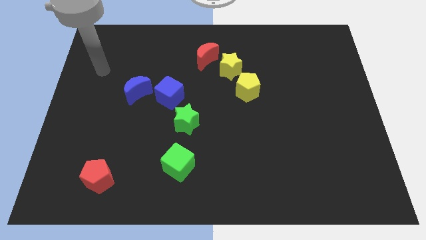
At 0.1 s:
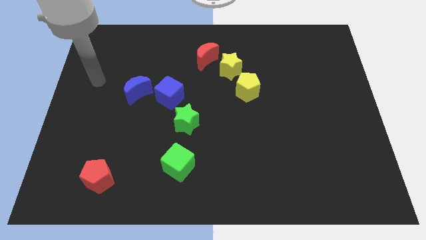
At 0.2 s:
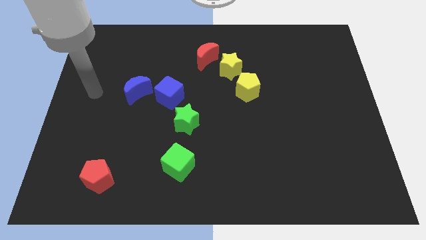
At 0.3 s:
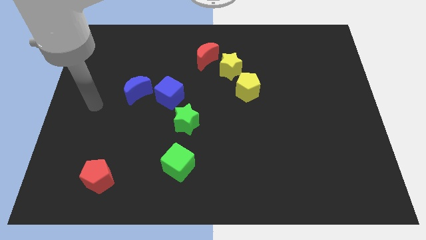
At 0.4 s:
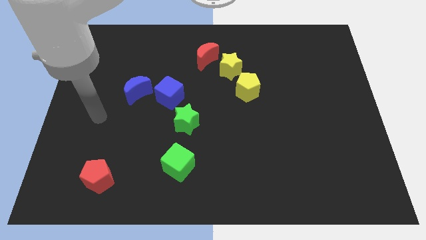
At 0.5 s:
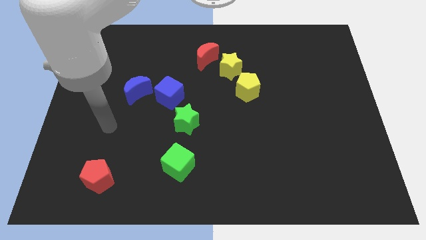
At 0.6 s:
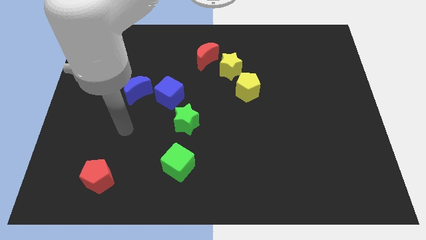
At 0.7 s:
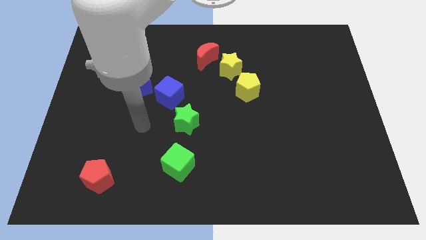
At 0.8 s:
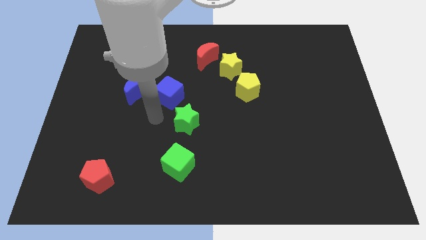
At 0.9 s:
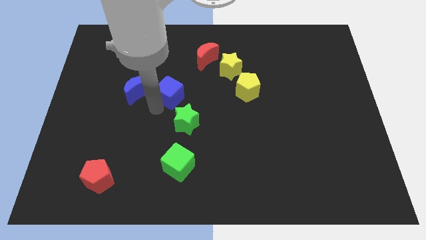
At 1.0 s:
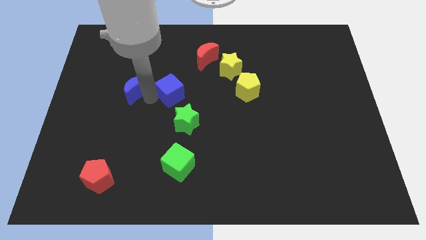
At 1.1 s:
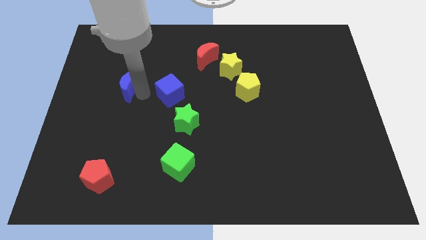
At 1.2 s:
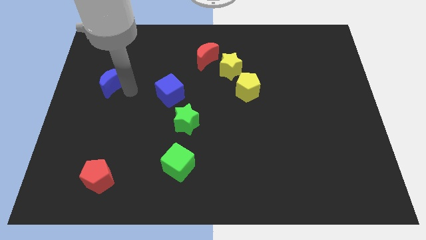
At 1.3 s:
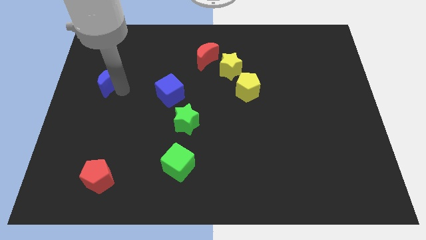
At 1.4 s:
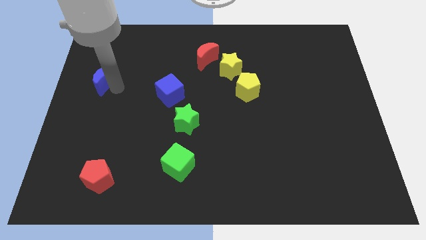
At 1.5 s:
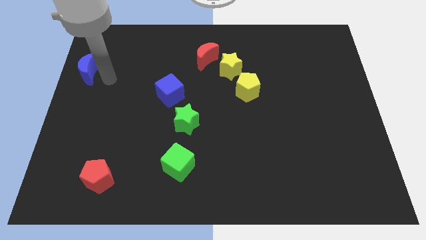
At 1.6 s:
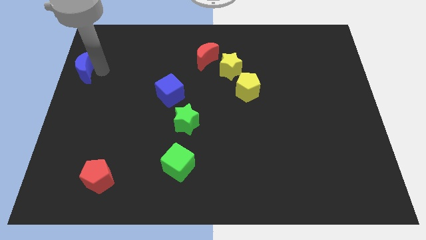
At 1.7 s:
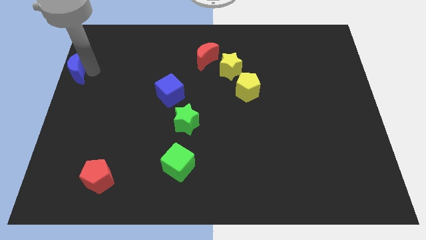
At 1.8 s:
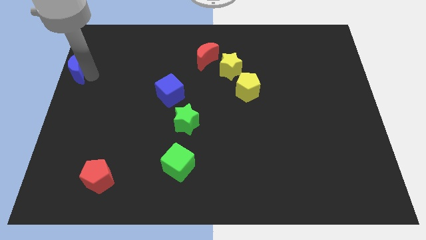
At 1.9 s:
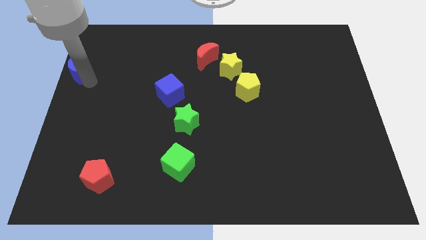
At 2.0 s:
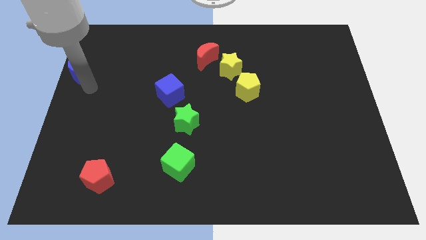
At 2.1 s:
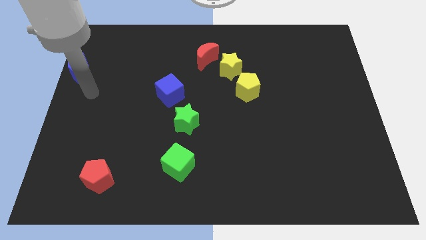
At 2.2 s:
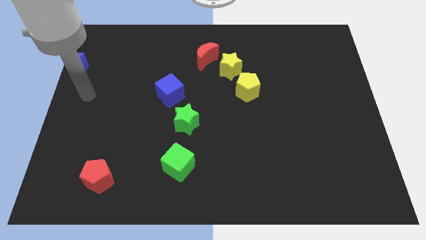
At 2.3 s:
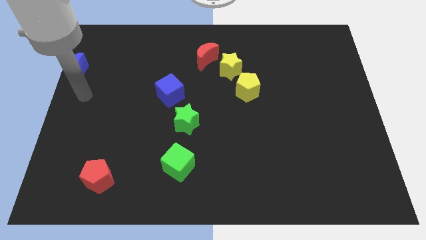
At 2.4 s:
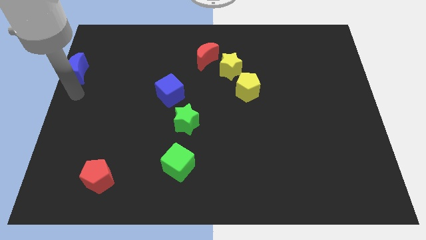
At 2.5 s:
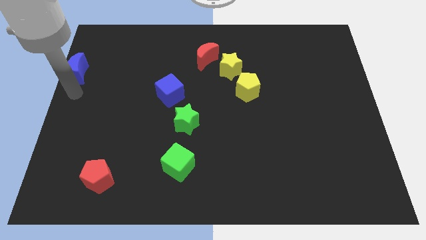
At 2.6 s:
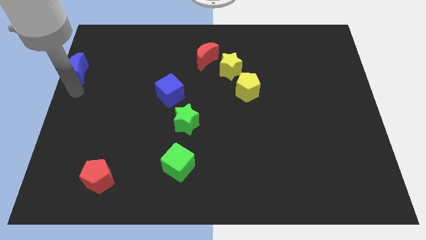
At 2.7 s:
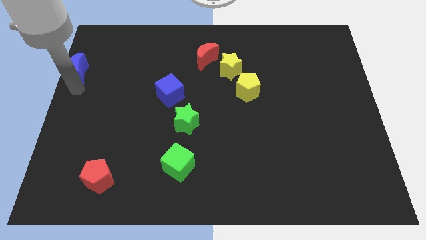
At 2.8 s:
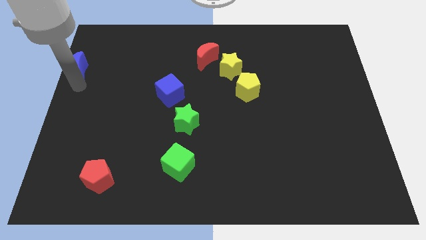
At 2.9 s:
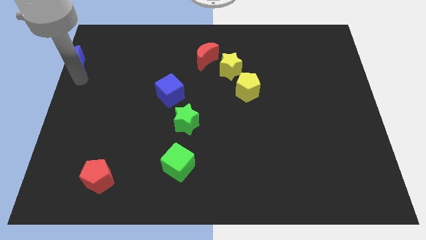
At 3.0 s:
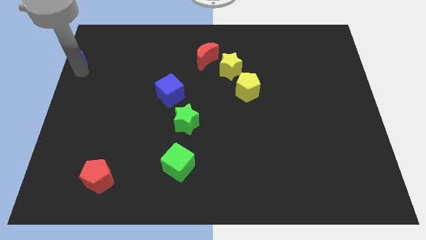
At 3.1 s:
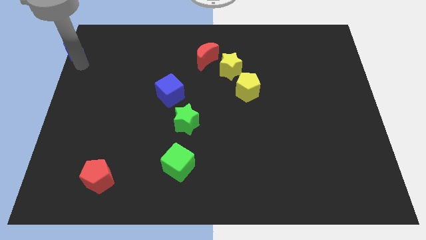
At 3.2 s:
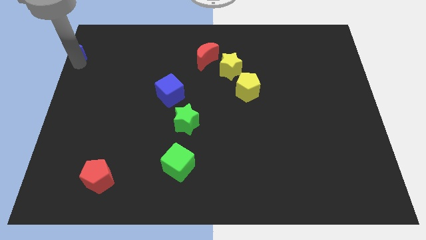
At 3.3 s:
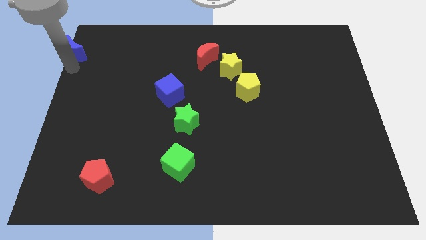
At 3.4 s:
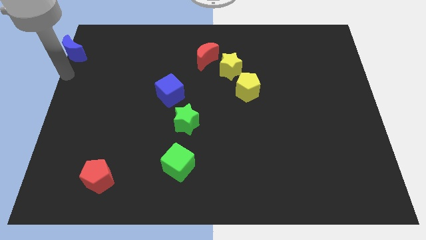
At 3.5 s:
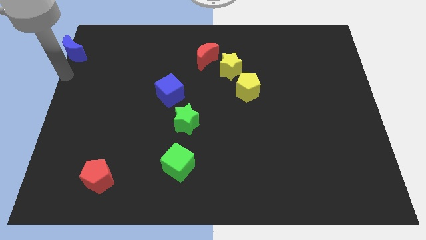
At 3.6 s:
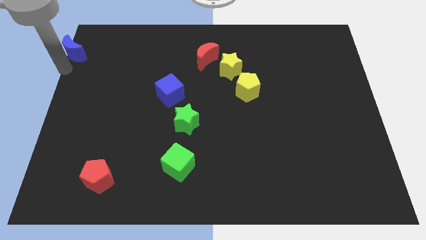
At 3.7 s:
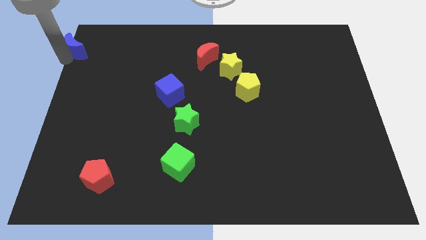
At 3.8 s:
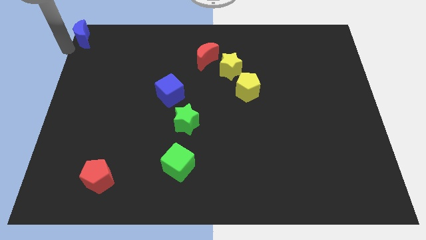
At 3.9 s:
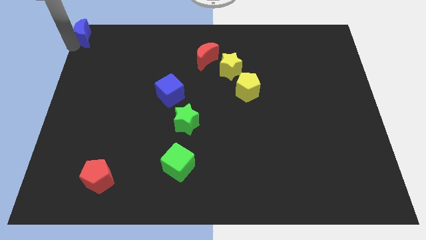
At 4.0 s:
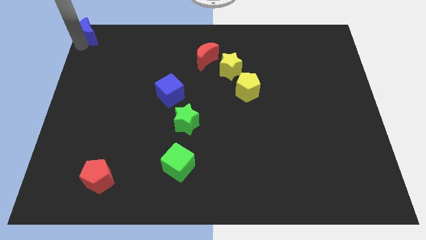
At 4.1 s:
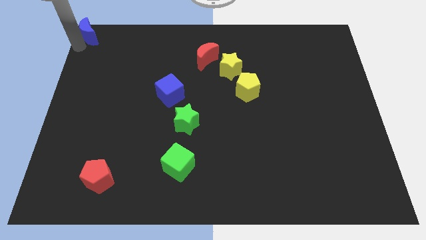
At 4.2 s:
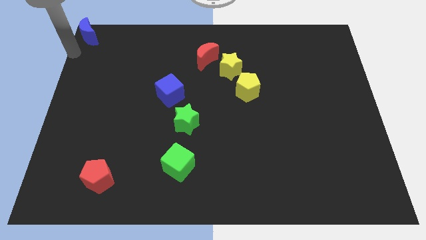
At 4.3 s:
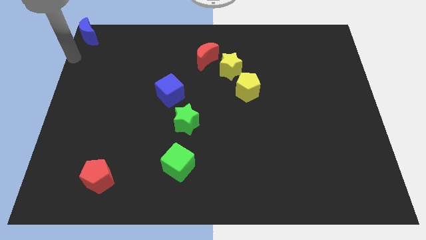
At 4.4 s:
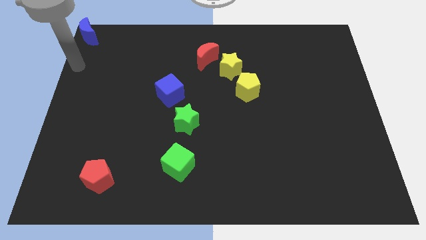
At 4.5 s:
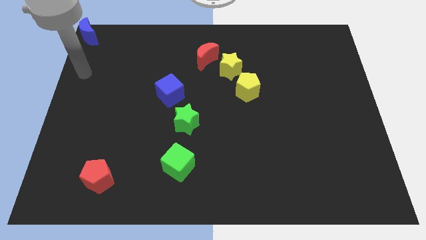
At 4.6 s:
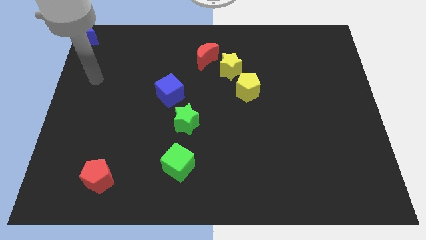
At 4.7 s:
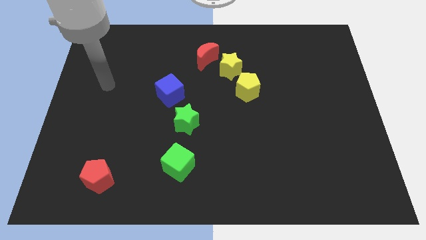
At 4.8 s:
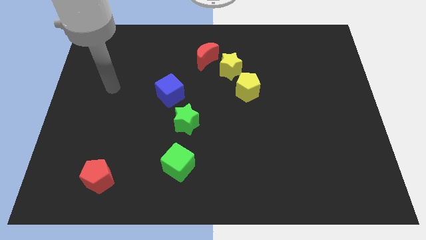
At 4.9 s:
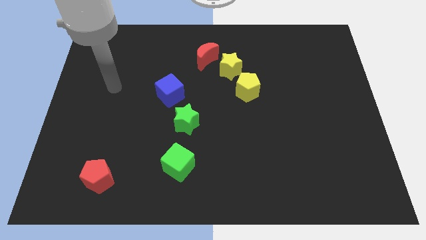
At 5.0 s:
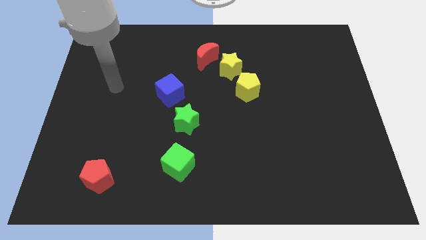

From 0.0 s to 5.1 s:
place the blue moon at the top left corner of the board

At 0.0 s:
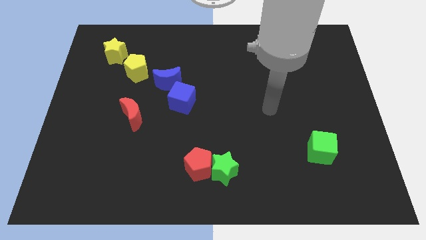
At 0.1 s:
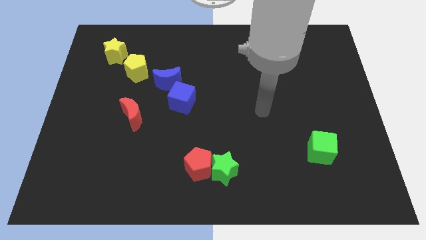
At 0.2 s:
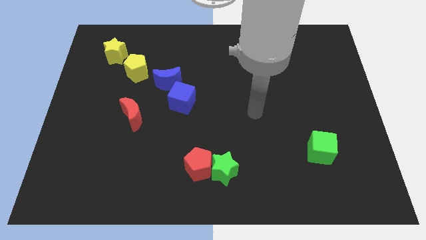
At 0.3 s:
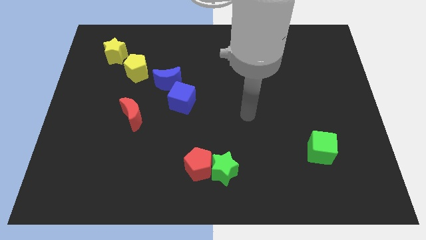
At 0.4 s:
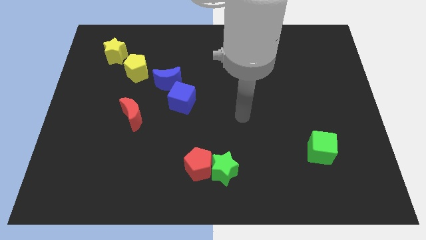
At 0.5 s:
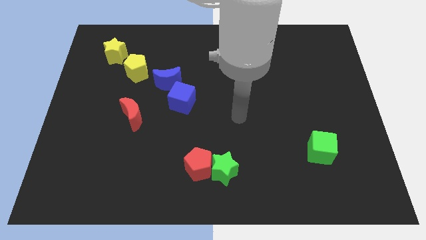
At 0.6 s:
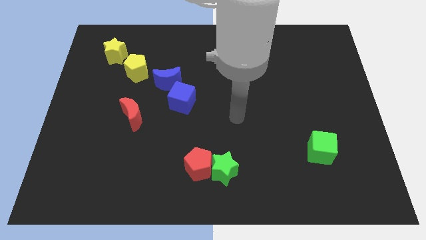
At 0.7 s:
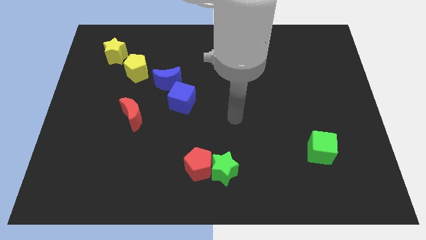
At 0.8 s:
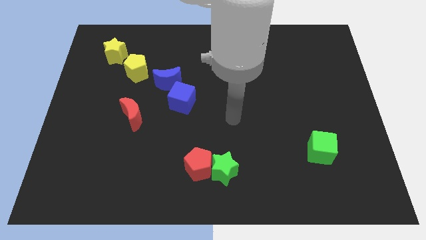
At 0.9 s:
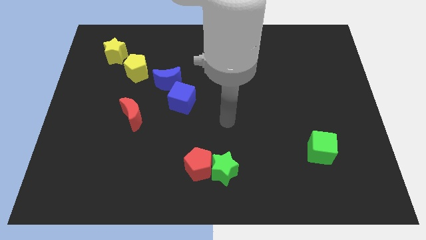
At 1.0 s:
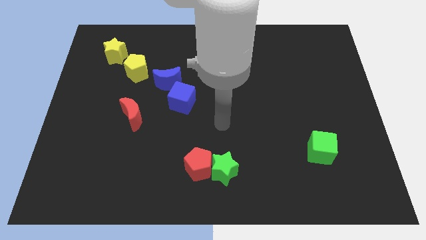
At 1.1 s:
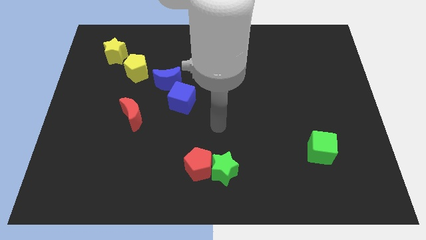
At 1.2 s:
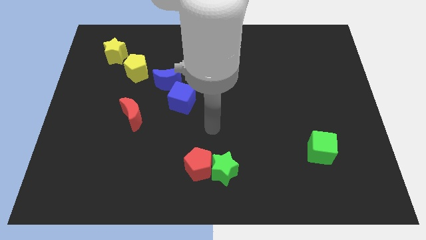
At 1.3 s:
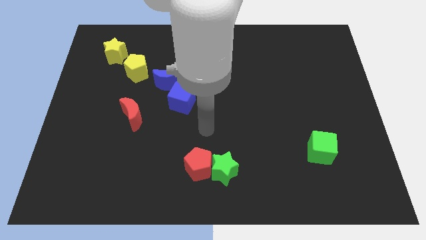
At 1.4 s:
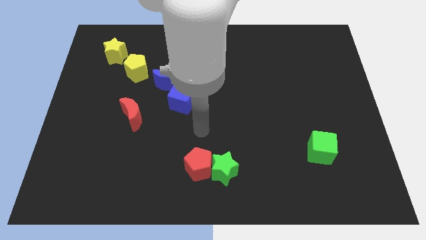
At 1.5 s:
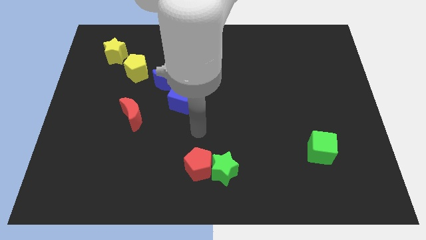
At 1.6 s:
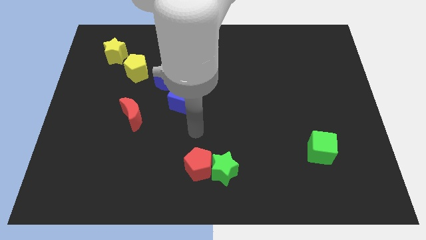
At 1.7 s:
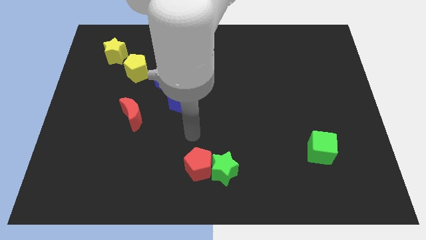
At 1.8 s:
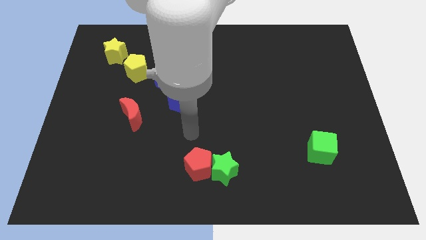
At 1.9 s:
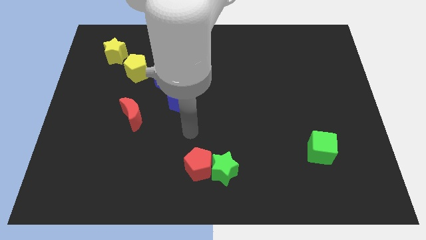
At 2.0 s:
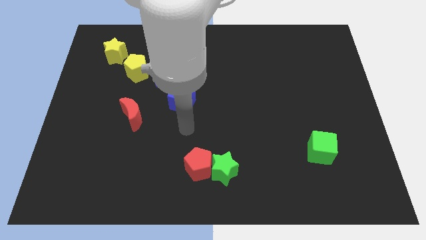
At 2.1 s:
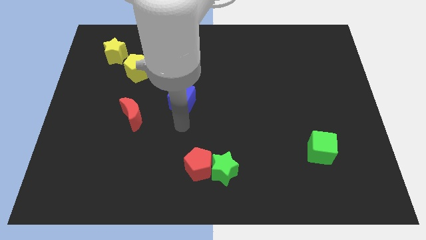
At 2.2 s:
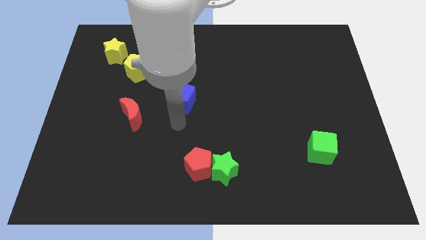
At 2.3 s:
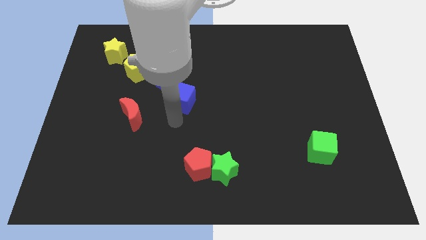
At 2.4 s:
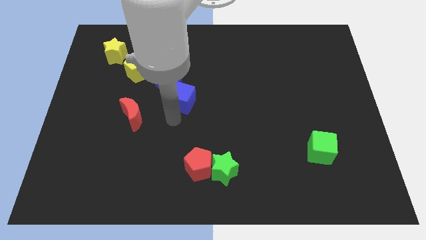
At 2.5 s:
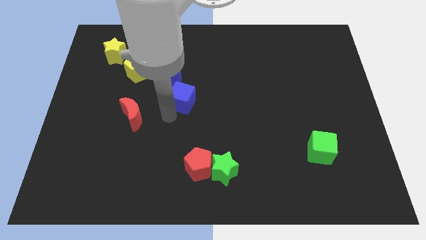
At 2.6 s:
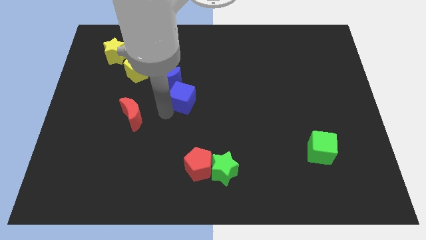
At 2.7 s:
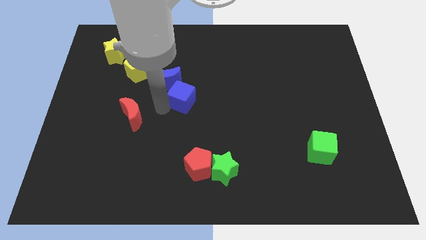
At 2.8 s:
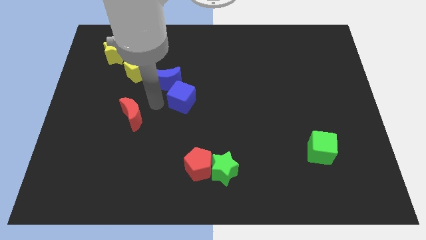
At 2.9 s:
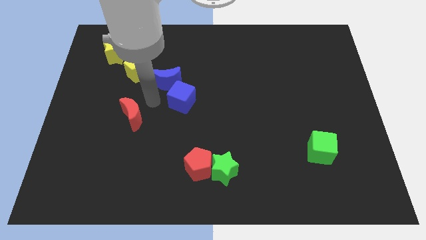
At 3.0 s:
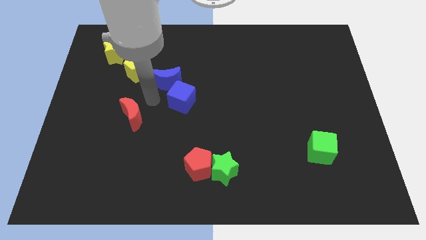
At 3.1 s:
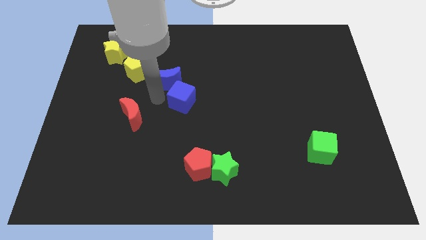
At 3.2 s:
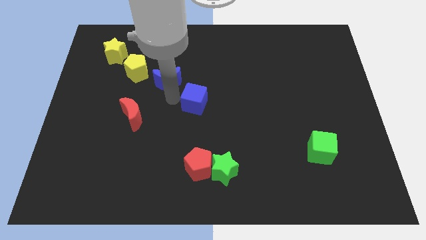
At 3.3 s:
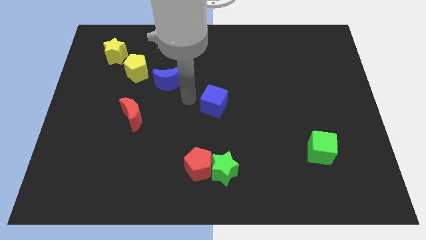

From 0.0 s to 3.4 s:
separate blue cube from the blue moon

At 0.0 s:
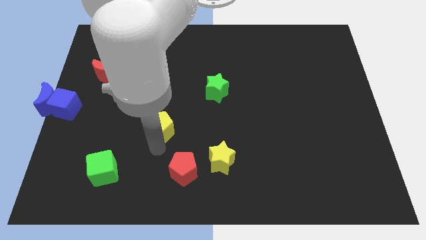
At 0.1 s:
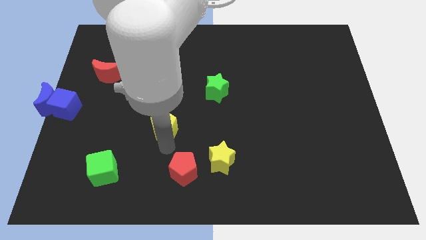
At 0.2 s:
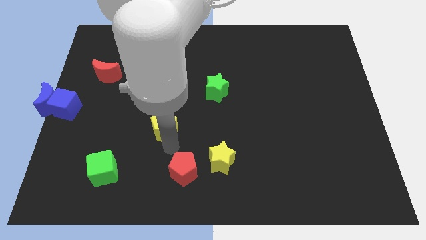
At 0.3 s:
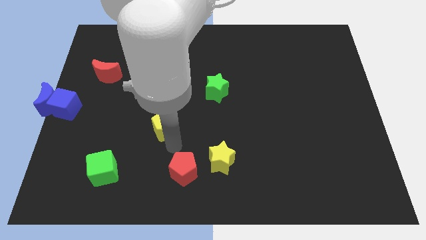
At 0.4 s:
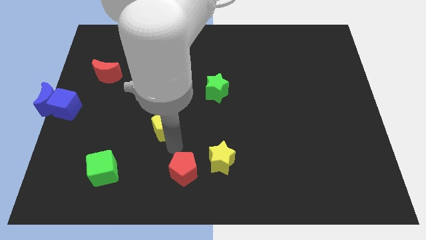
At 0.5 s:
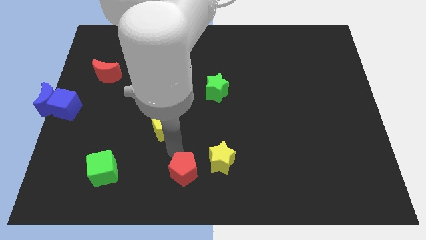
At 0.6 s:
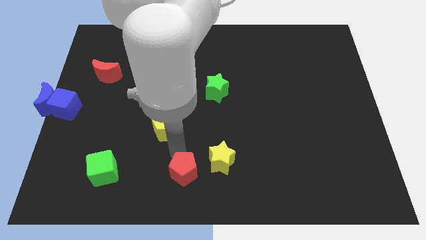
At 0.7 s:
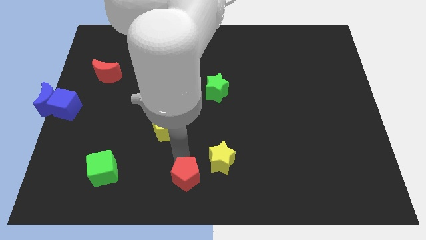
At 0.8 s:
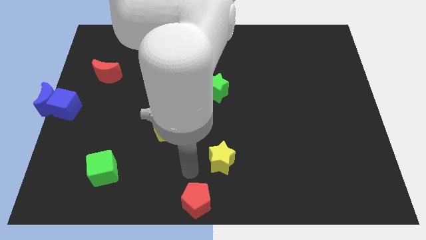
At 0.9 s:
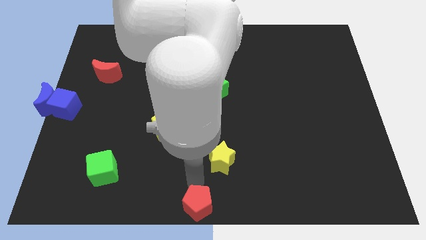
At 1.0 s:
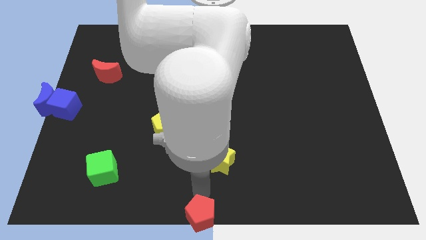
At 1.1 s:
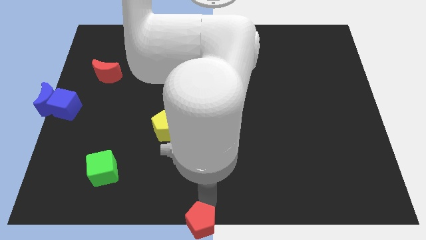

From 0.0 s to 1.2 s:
move the red pentagon to the bottom center of the board
